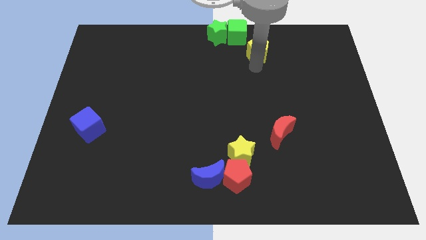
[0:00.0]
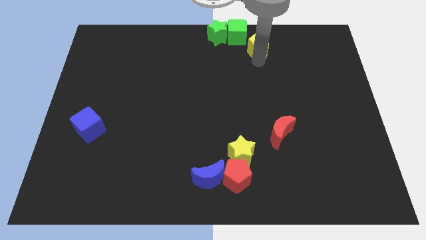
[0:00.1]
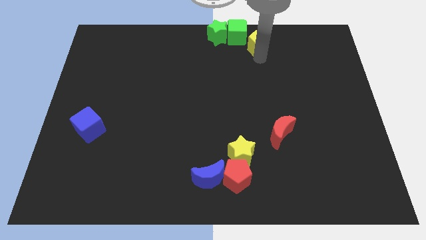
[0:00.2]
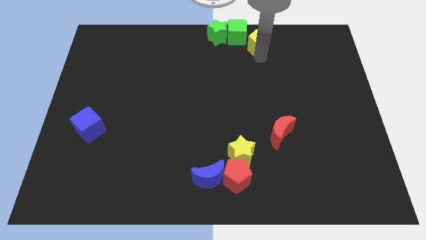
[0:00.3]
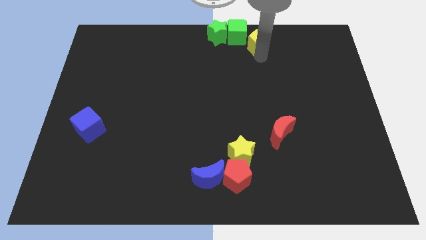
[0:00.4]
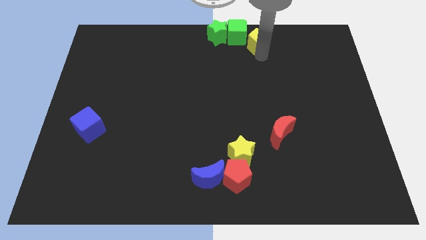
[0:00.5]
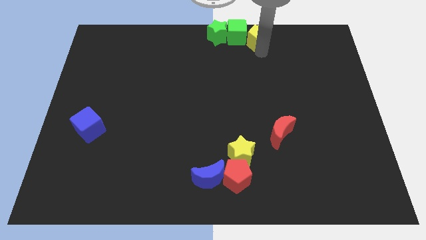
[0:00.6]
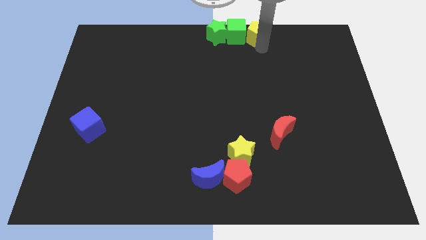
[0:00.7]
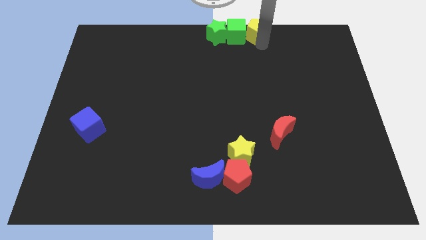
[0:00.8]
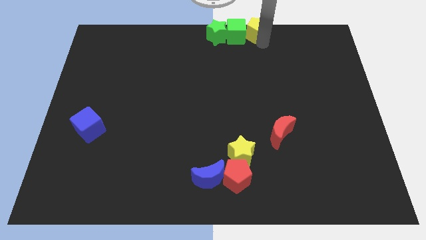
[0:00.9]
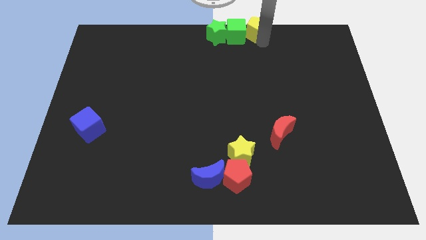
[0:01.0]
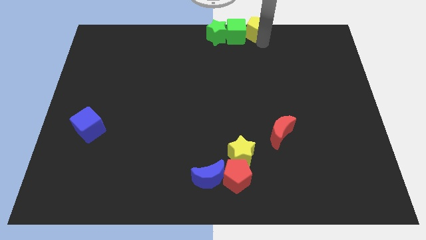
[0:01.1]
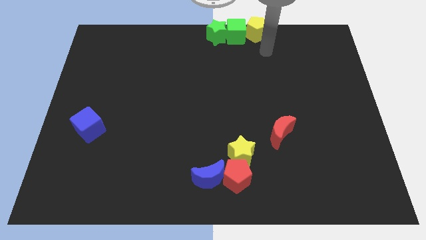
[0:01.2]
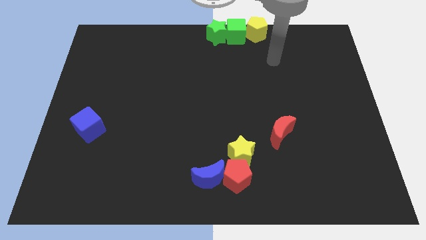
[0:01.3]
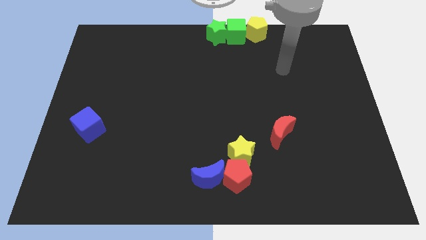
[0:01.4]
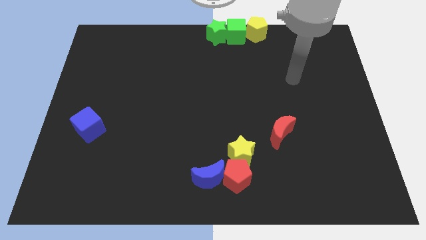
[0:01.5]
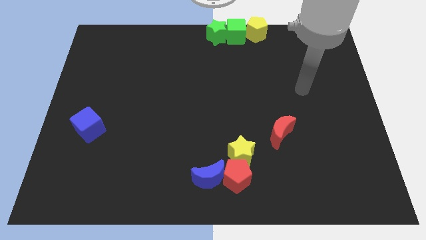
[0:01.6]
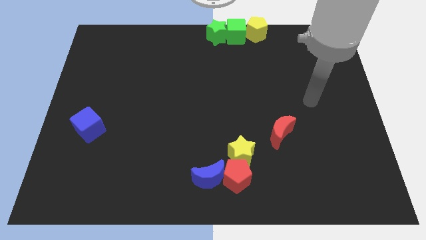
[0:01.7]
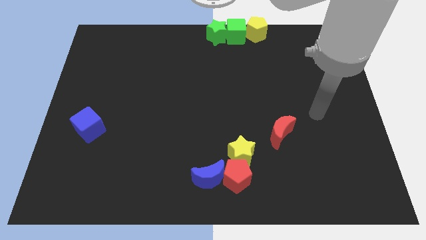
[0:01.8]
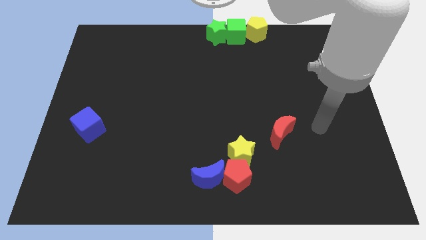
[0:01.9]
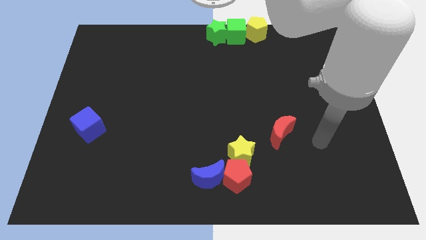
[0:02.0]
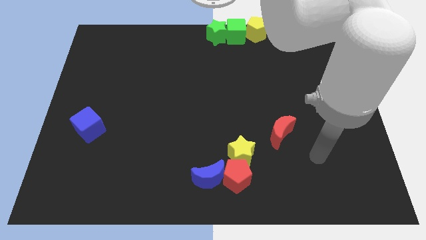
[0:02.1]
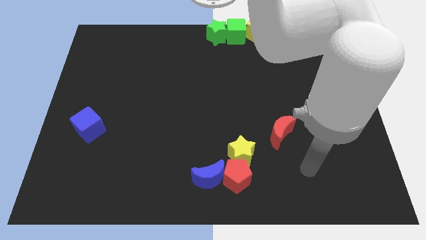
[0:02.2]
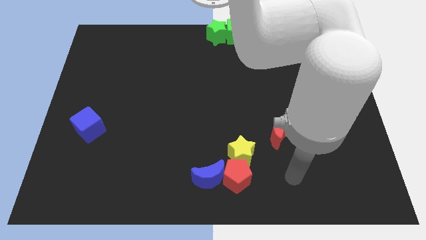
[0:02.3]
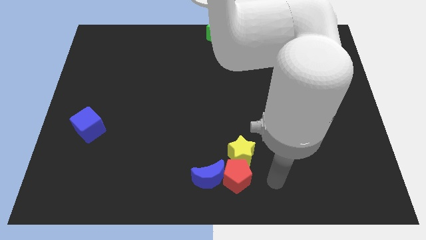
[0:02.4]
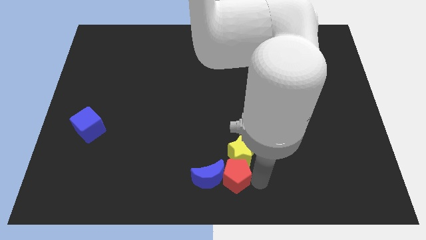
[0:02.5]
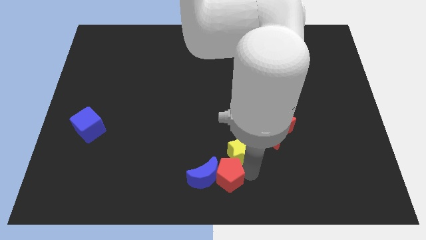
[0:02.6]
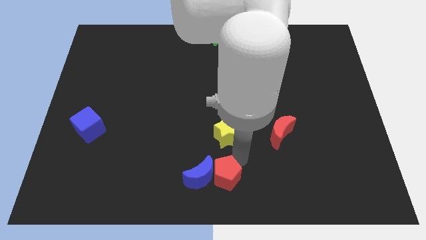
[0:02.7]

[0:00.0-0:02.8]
move your arm towards the yellow star

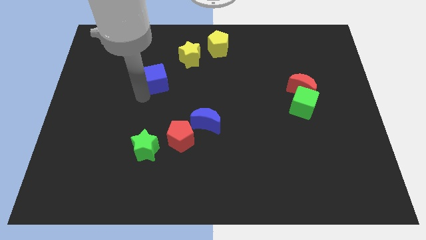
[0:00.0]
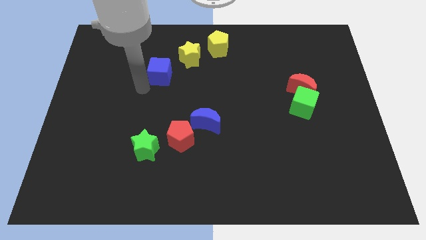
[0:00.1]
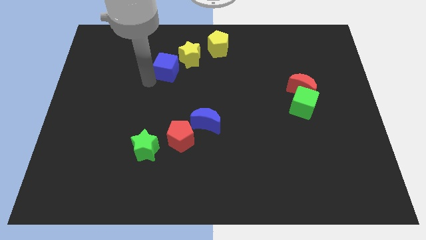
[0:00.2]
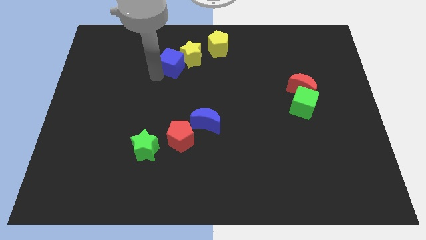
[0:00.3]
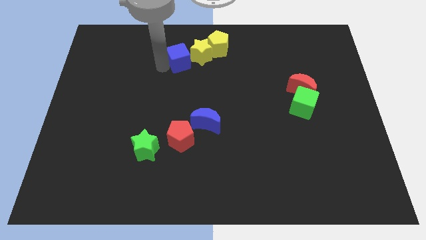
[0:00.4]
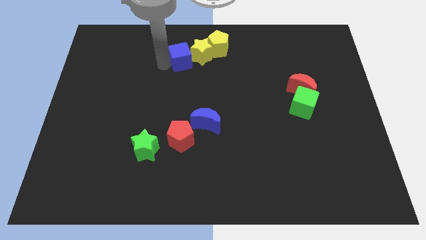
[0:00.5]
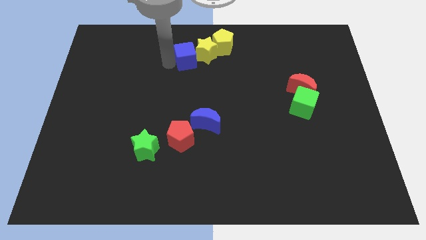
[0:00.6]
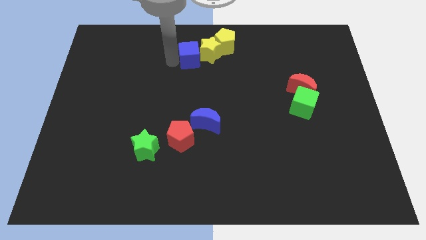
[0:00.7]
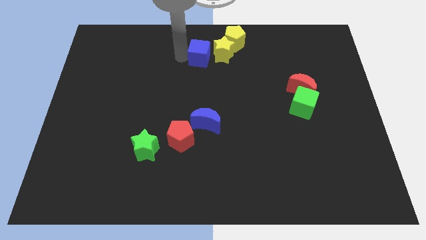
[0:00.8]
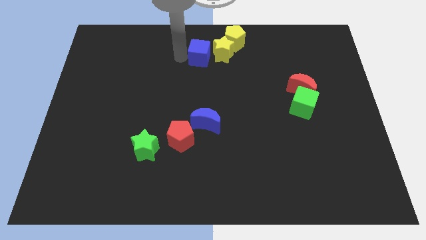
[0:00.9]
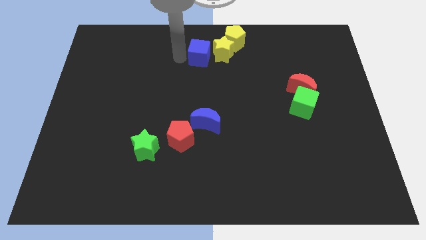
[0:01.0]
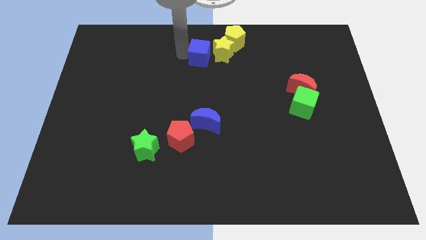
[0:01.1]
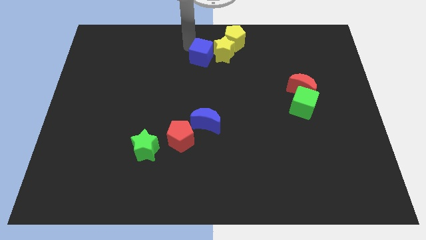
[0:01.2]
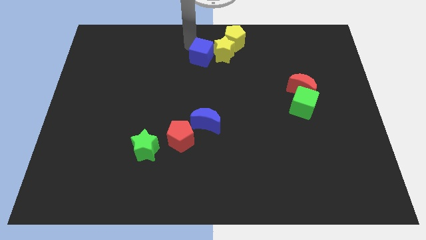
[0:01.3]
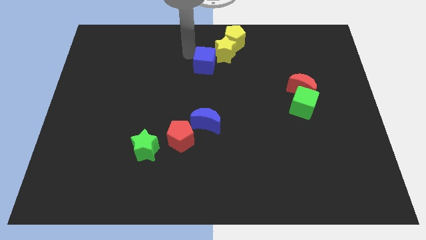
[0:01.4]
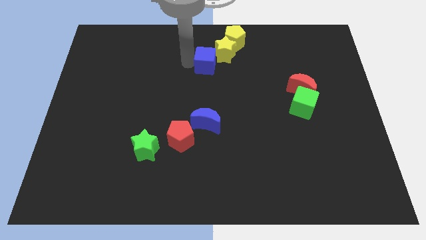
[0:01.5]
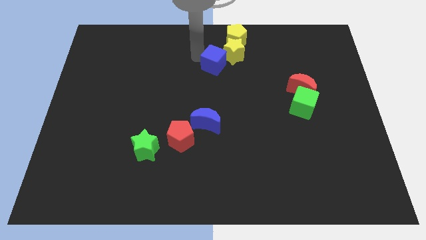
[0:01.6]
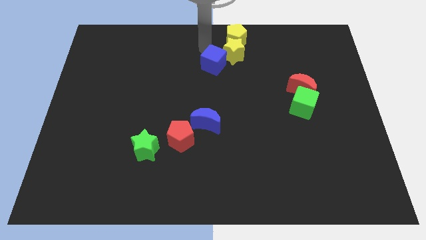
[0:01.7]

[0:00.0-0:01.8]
place blue cube into the yellow star diagonally

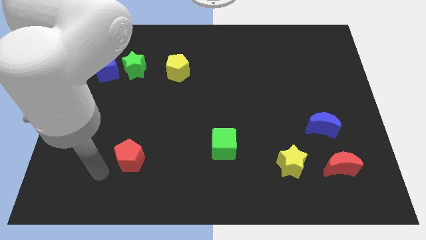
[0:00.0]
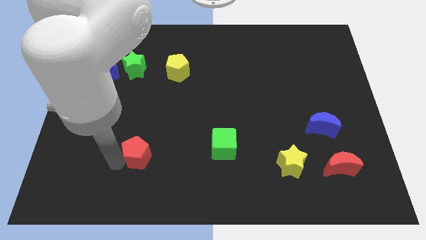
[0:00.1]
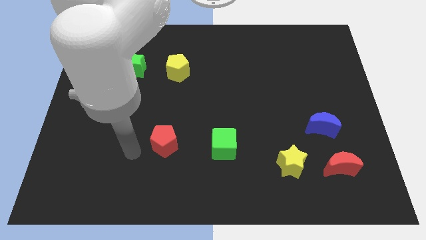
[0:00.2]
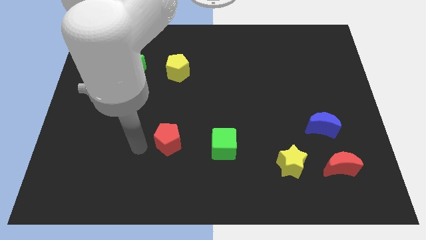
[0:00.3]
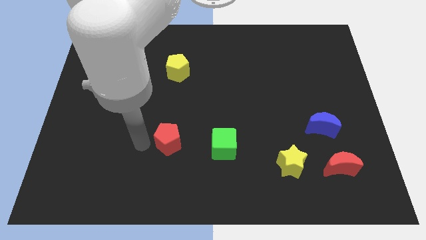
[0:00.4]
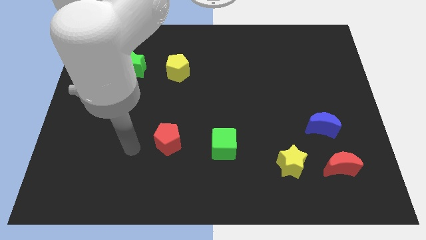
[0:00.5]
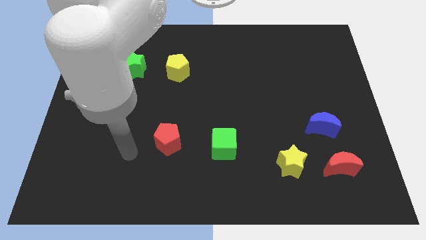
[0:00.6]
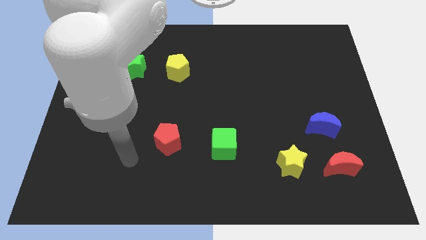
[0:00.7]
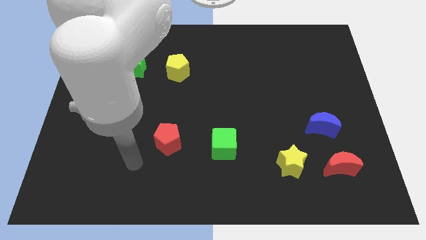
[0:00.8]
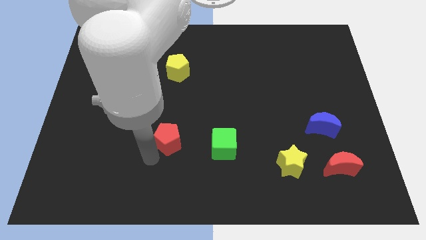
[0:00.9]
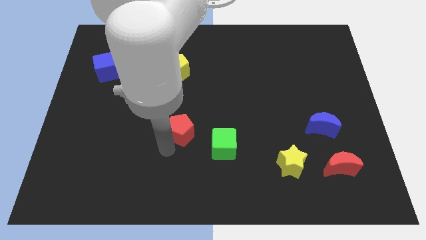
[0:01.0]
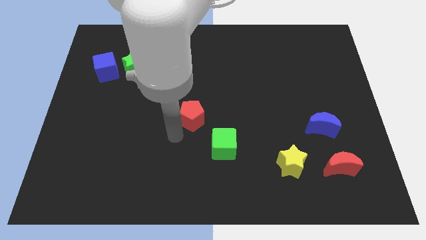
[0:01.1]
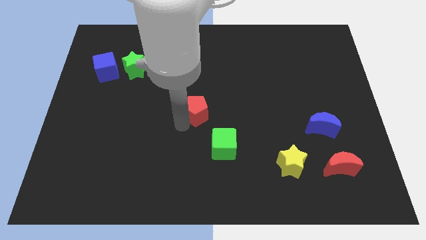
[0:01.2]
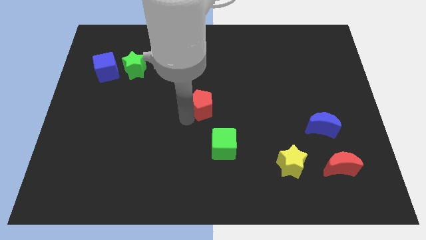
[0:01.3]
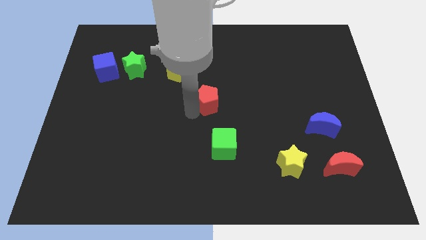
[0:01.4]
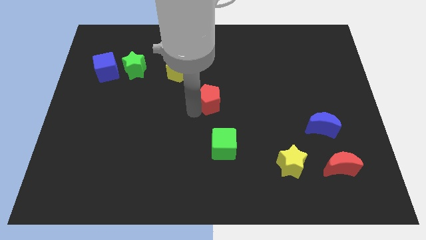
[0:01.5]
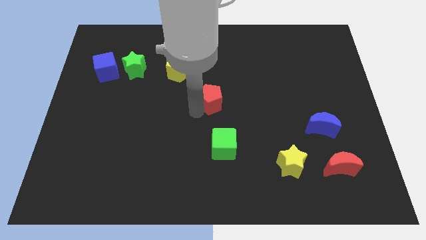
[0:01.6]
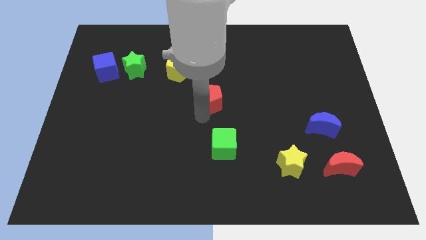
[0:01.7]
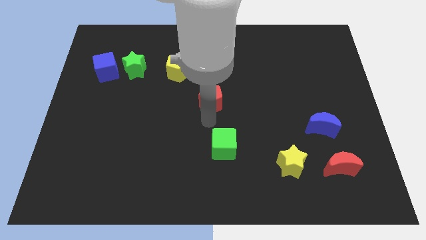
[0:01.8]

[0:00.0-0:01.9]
move the red pentagon towards the center of the board

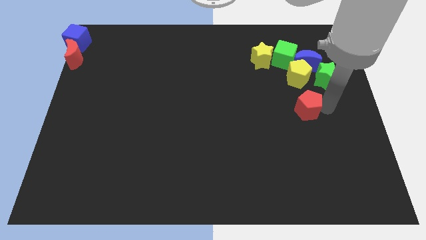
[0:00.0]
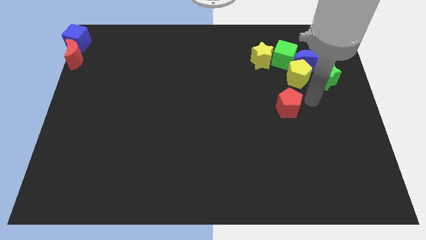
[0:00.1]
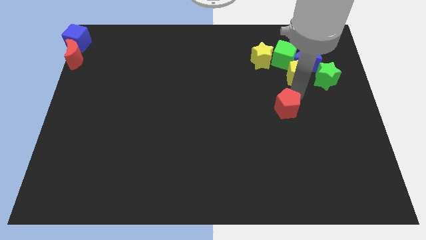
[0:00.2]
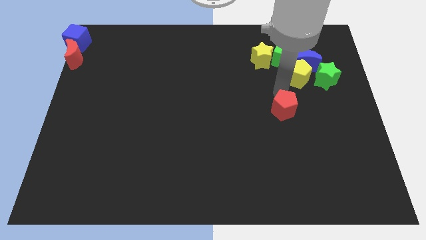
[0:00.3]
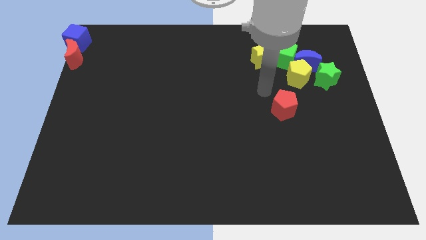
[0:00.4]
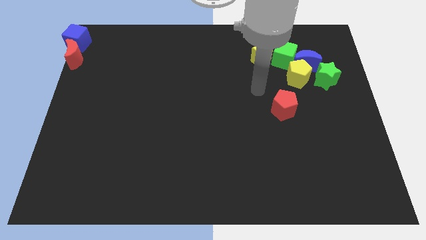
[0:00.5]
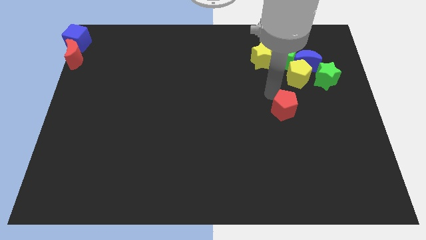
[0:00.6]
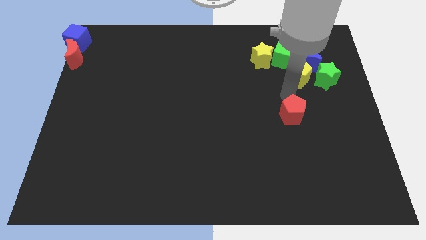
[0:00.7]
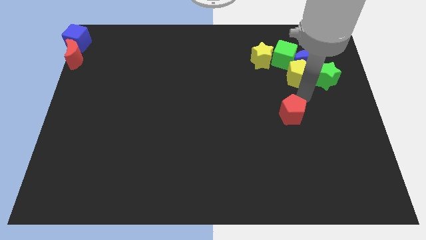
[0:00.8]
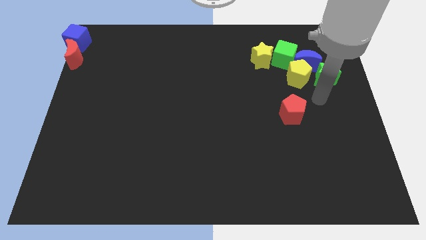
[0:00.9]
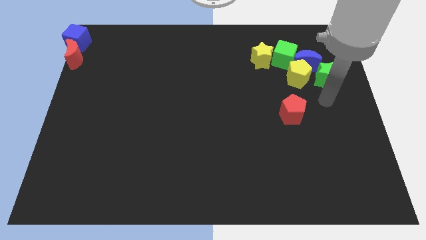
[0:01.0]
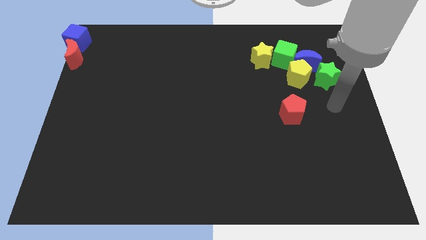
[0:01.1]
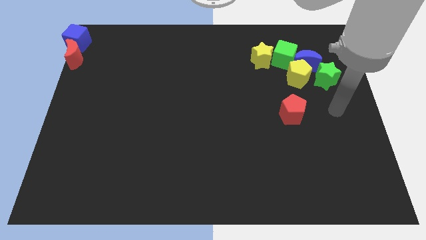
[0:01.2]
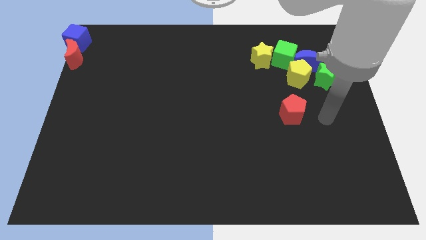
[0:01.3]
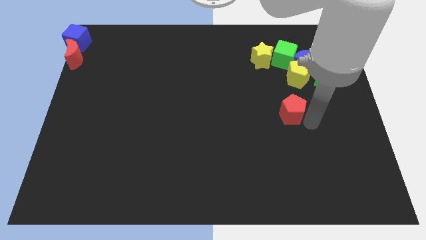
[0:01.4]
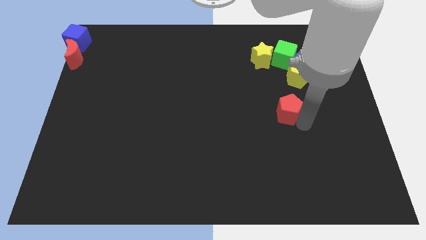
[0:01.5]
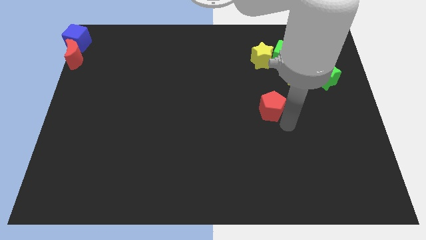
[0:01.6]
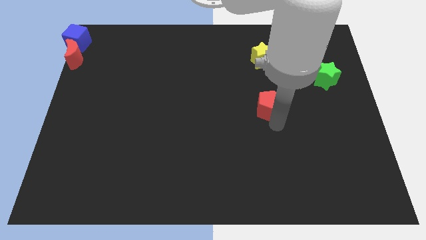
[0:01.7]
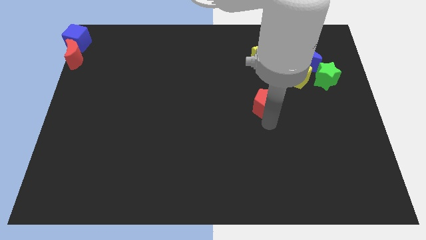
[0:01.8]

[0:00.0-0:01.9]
move the red pentagon towards the left of the board

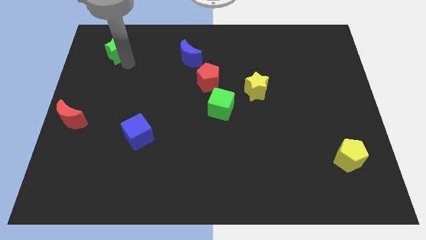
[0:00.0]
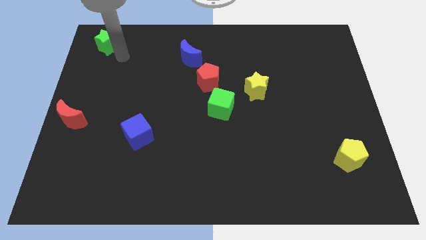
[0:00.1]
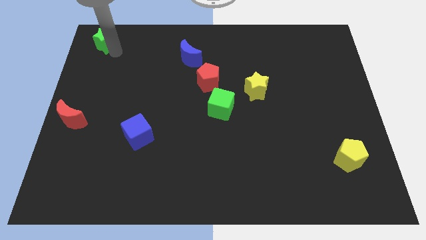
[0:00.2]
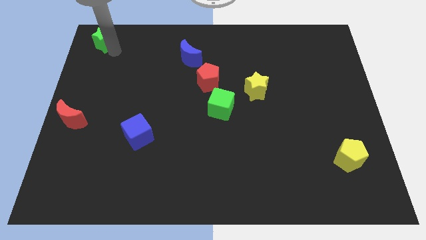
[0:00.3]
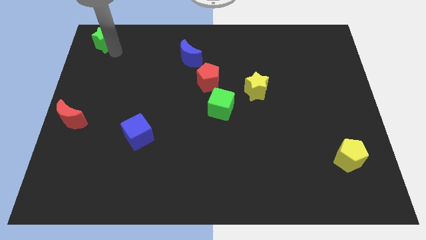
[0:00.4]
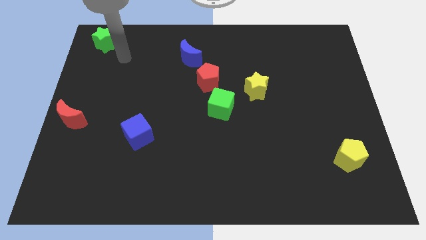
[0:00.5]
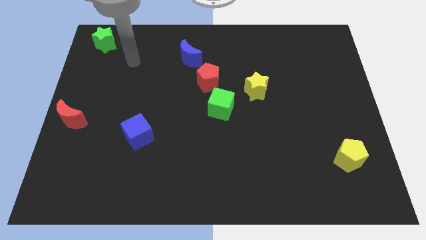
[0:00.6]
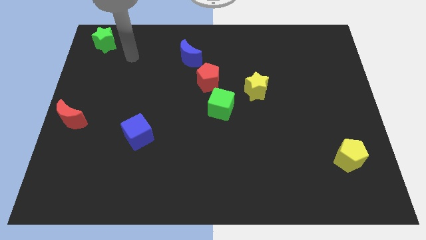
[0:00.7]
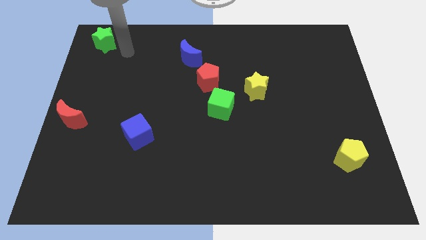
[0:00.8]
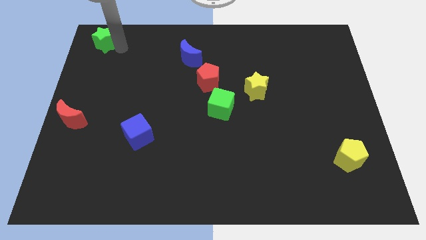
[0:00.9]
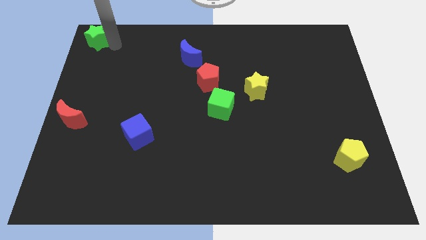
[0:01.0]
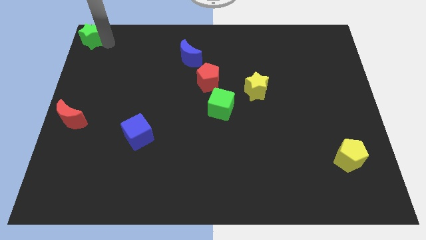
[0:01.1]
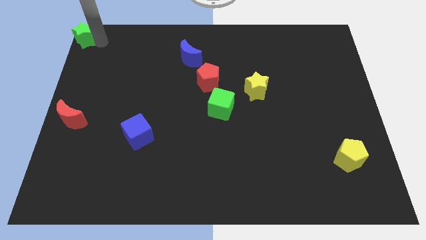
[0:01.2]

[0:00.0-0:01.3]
move the green star to the top left
